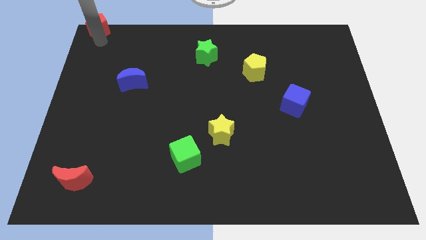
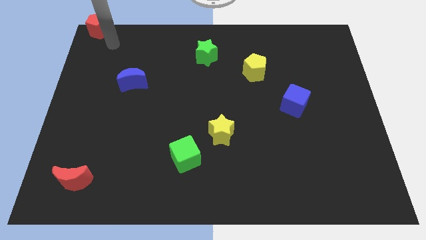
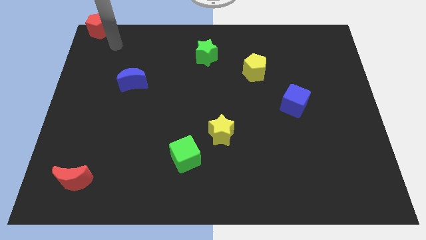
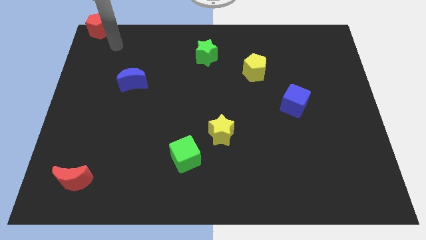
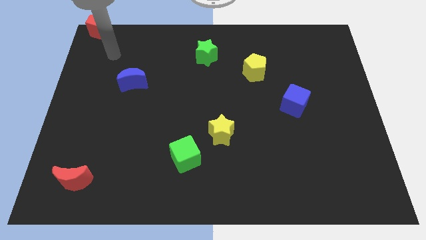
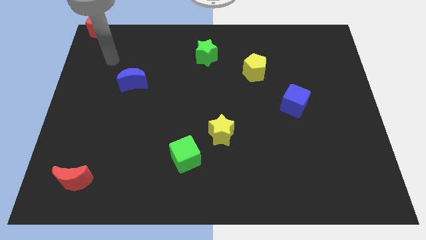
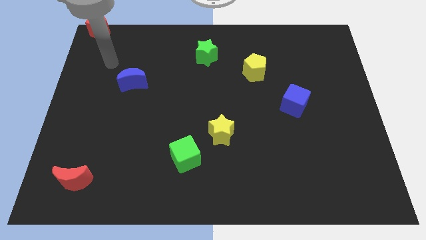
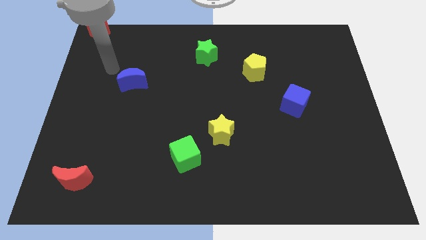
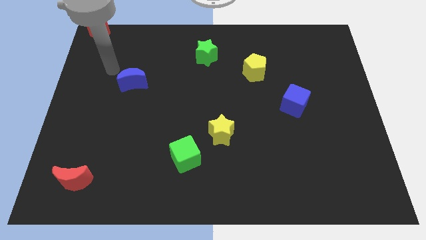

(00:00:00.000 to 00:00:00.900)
move your arm away from red pentagon

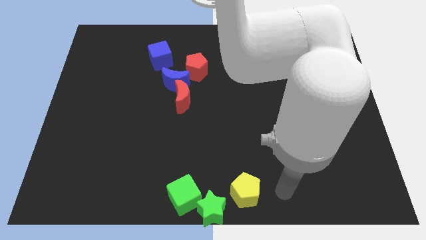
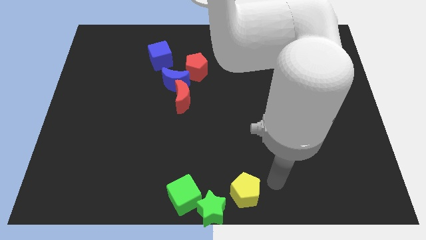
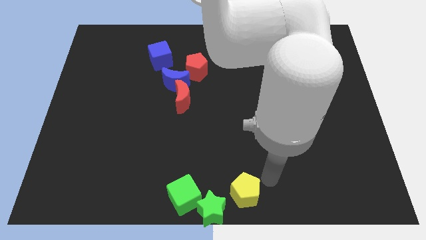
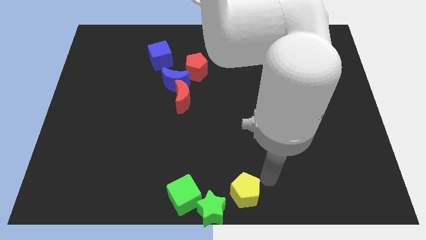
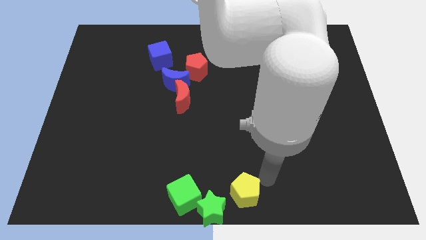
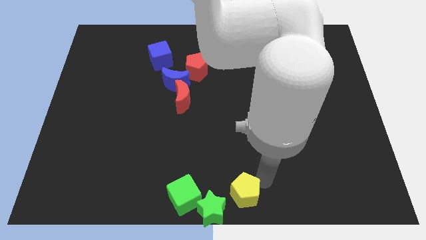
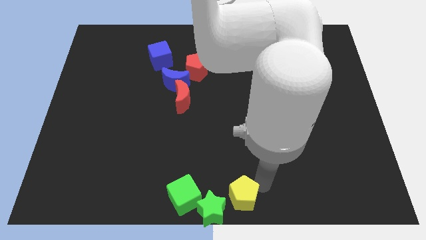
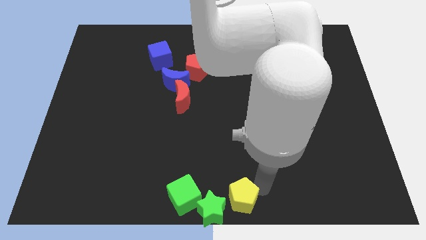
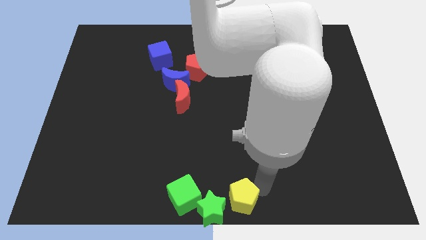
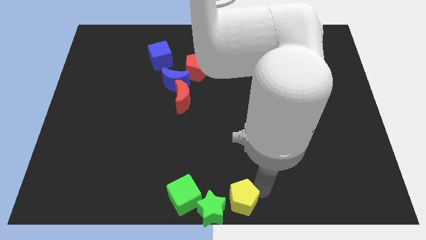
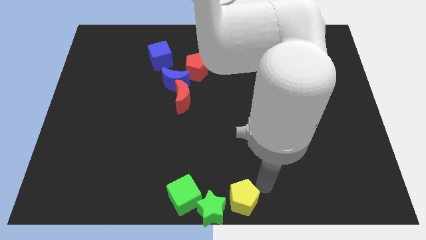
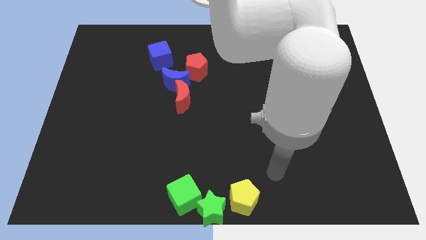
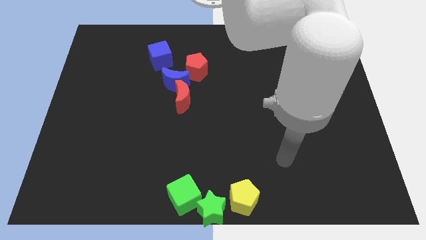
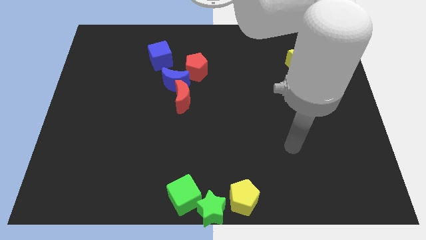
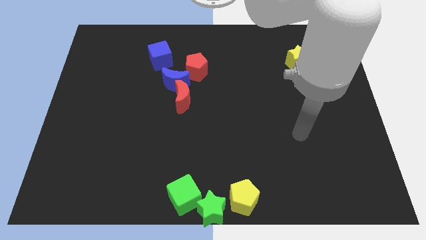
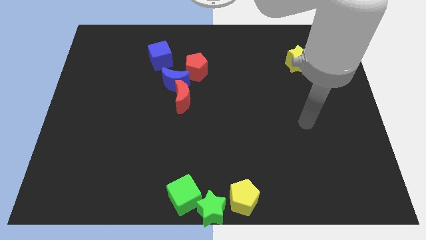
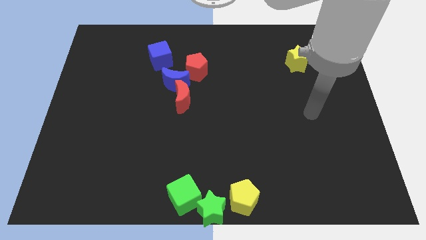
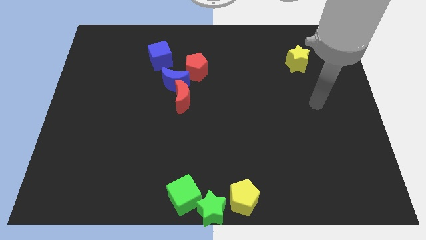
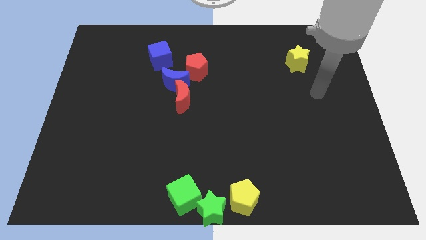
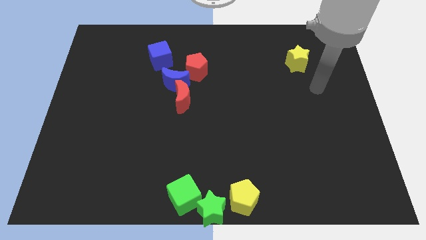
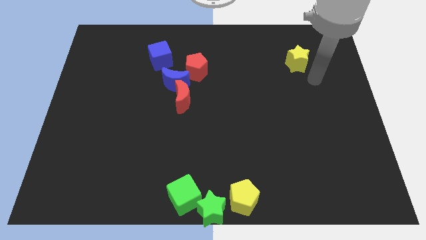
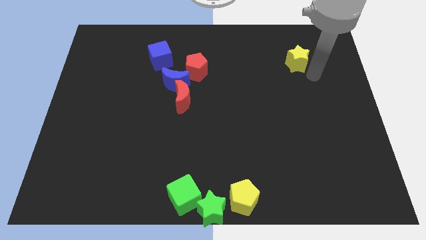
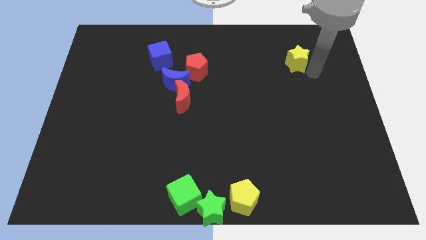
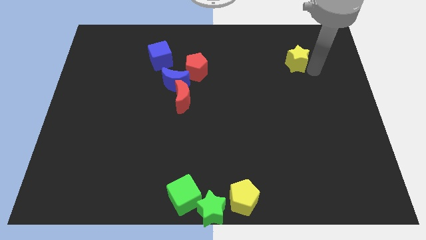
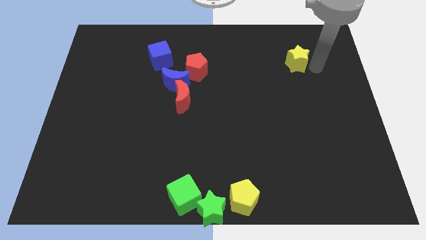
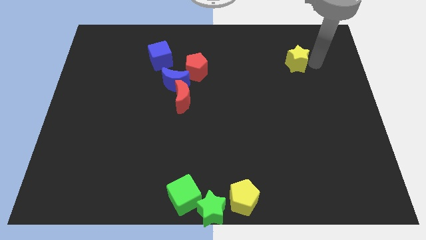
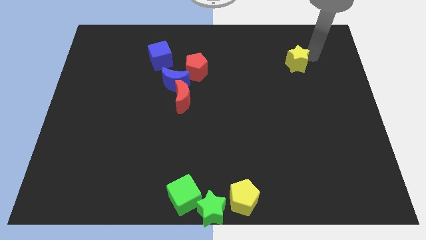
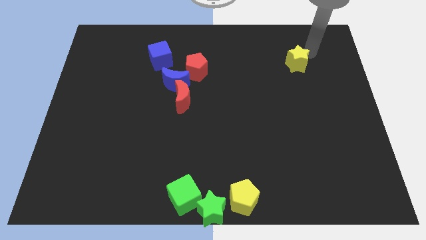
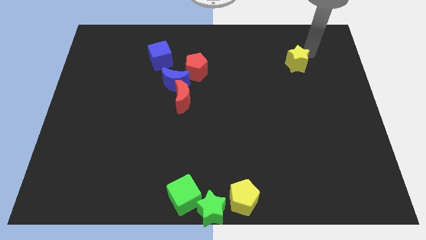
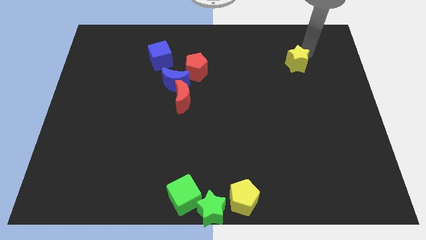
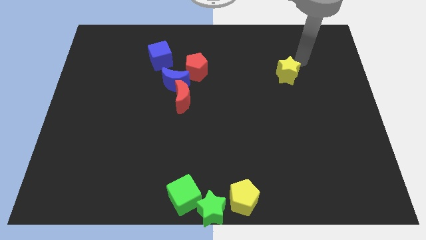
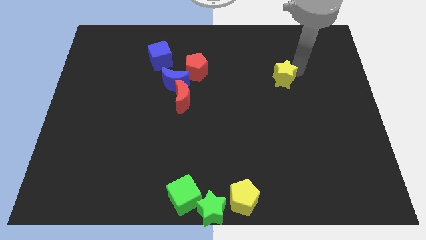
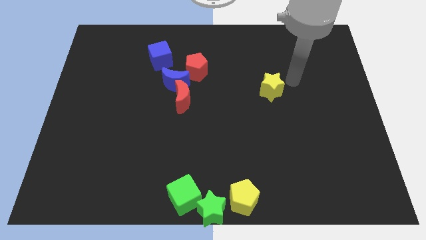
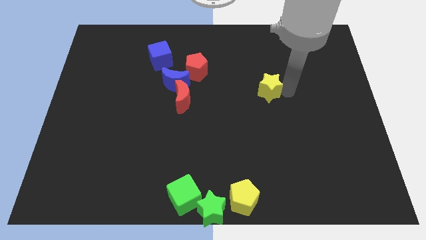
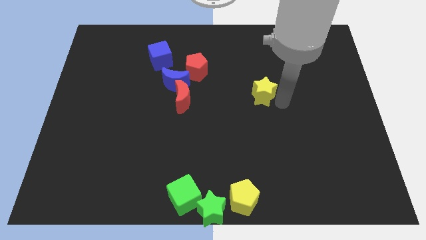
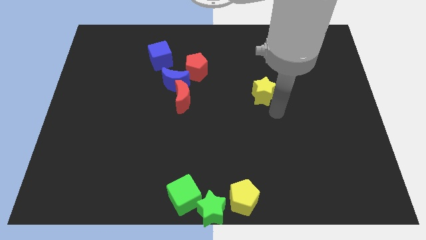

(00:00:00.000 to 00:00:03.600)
place the yellow star right to the red moon

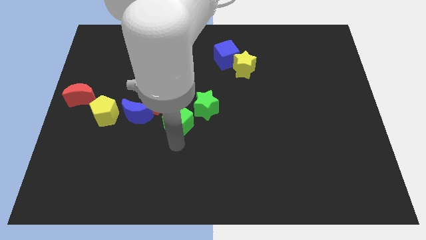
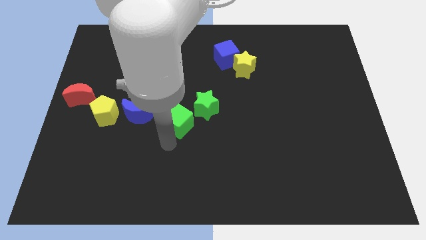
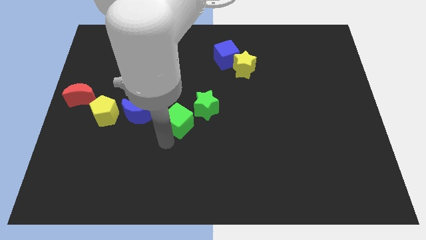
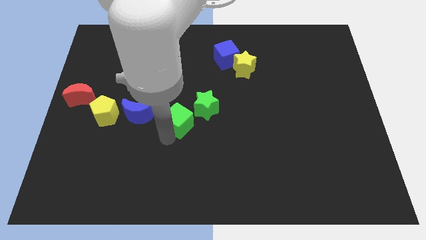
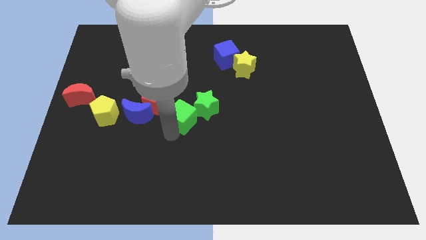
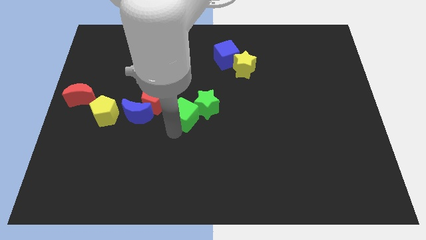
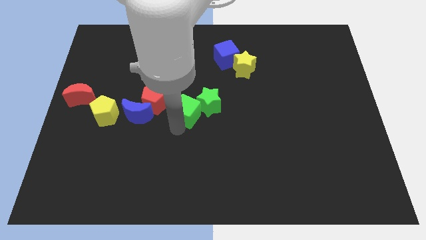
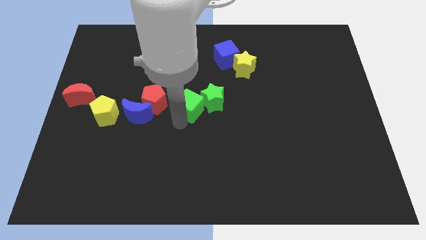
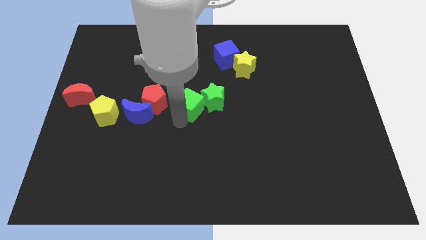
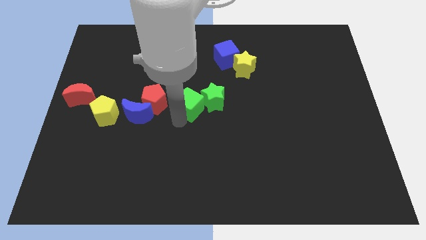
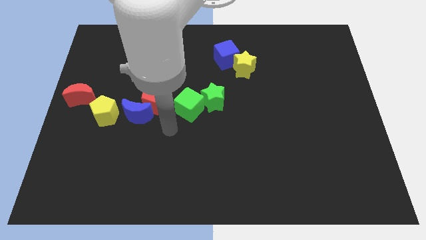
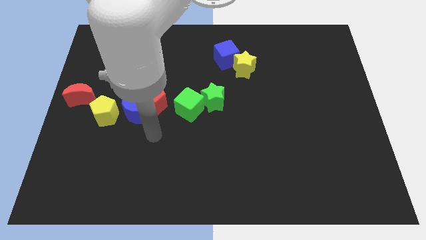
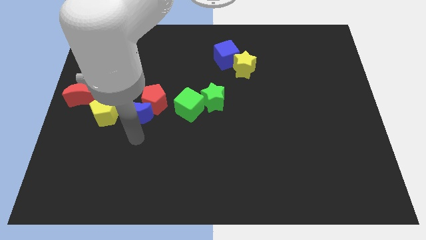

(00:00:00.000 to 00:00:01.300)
push the green star with the green square

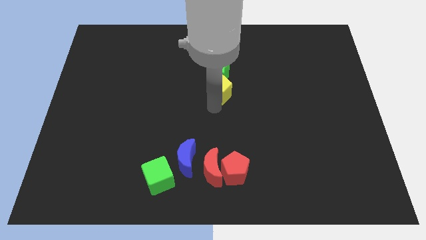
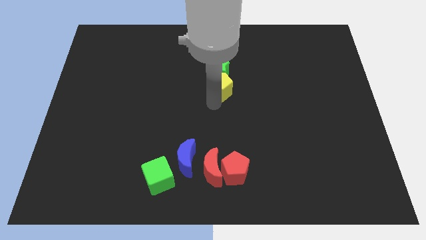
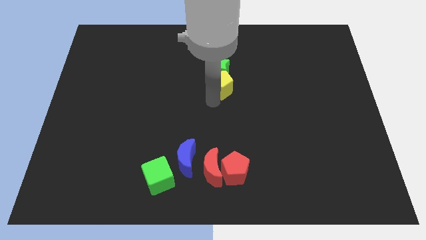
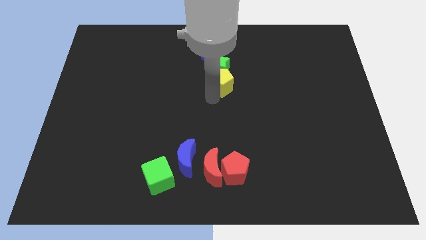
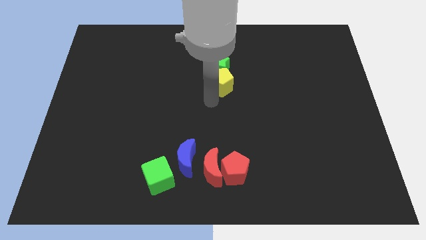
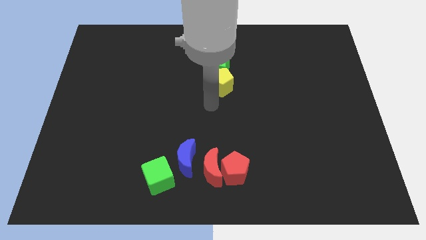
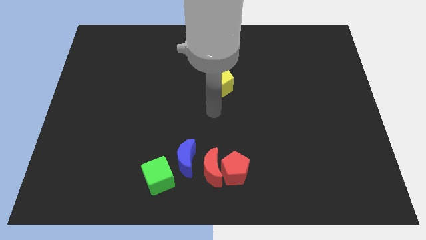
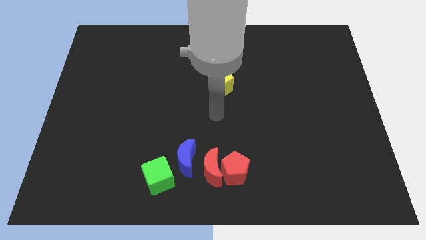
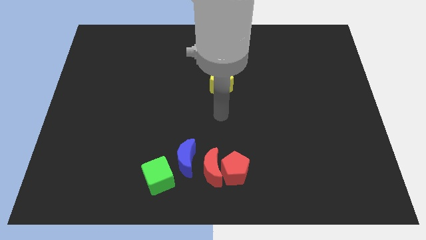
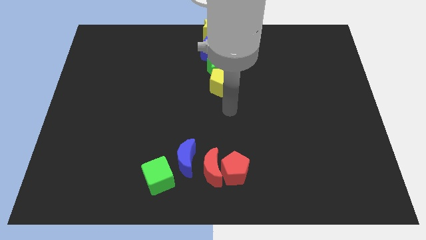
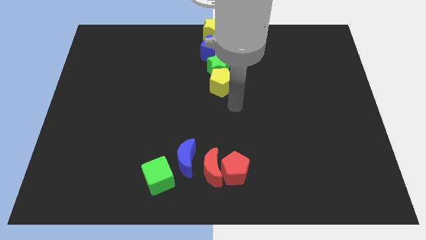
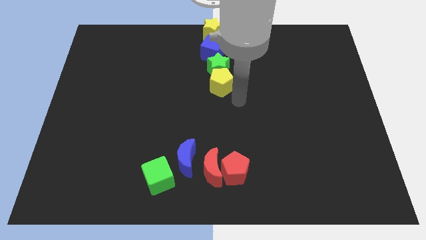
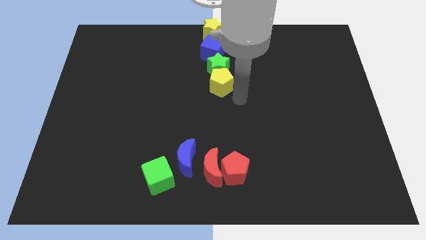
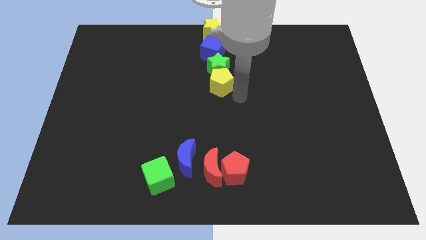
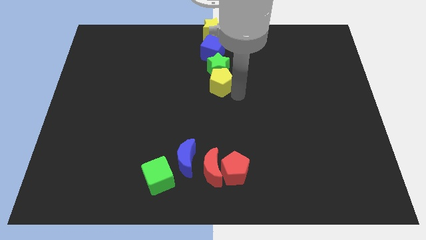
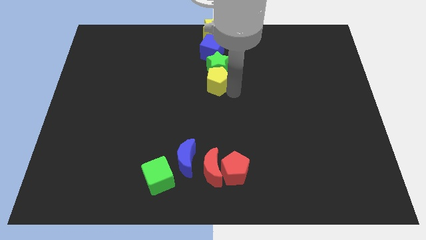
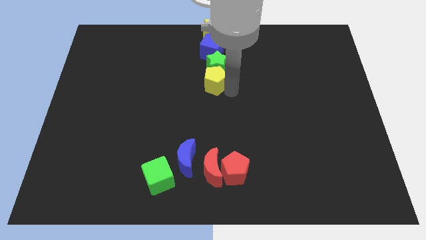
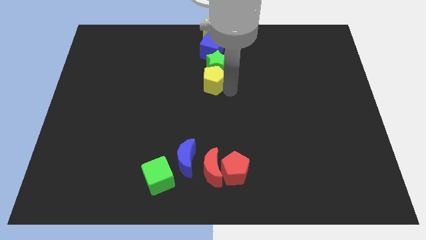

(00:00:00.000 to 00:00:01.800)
slide the yellow pentagon into the green star

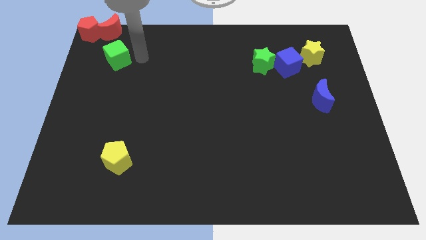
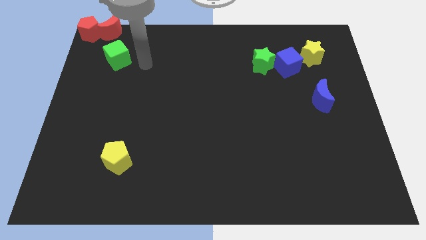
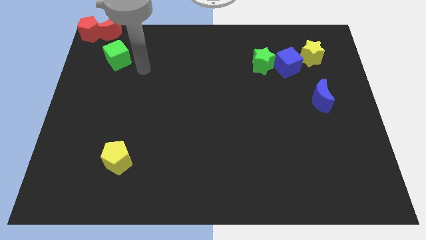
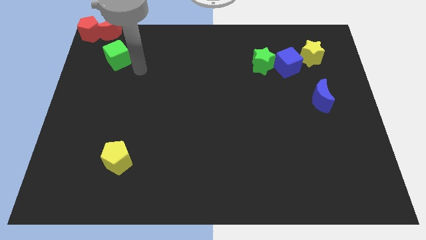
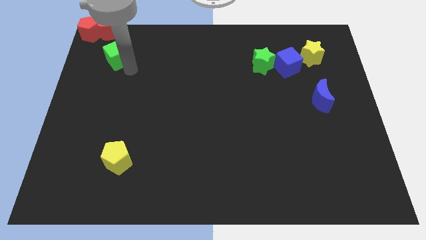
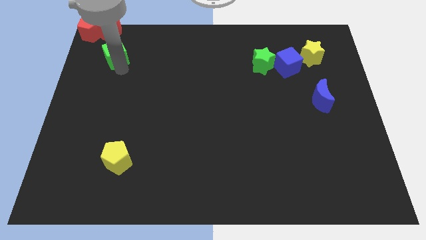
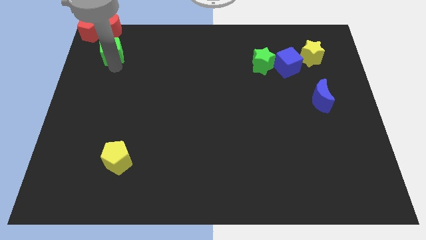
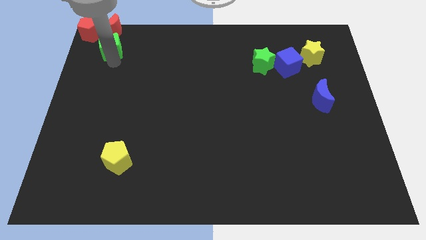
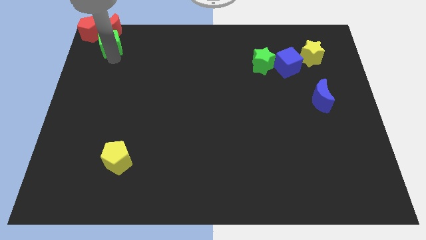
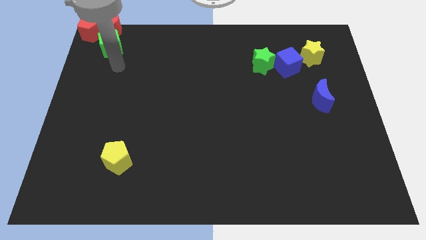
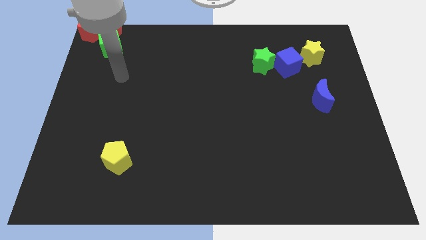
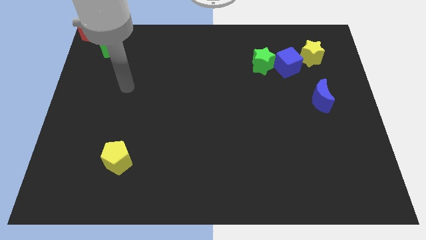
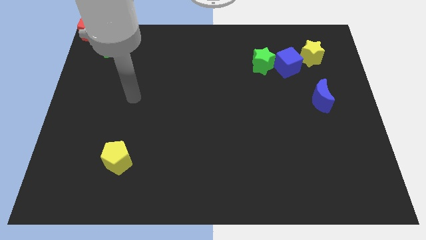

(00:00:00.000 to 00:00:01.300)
push green cube into red crescent
